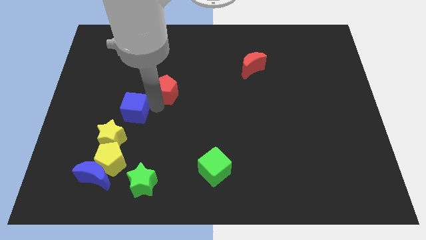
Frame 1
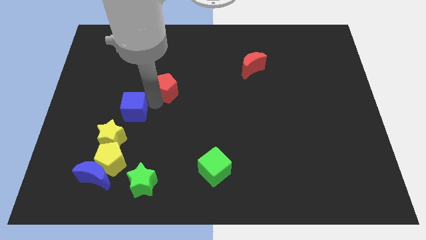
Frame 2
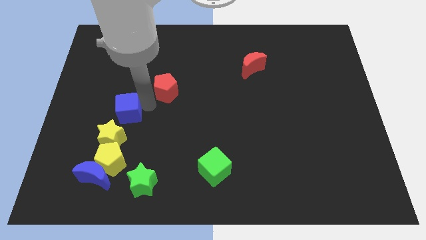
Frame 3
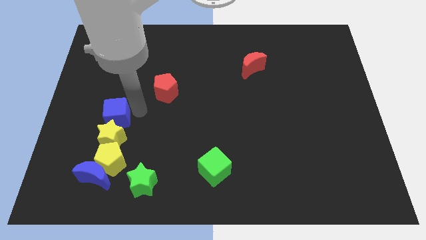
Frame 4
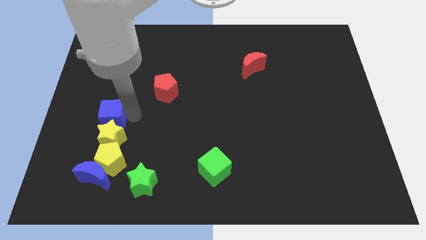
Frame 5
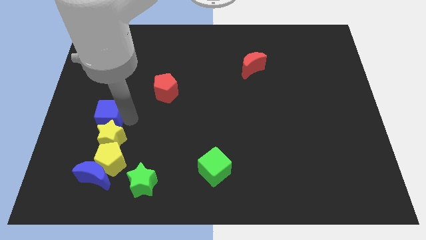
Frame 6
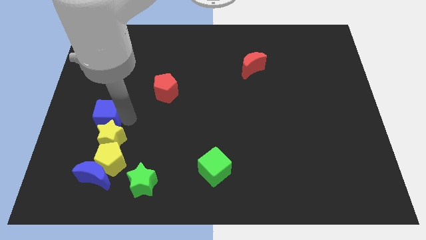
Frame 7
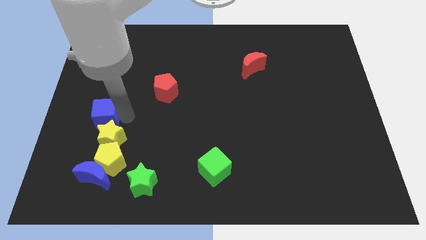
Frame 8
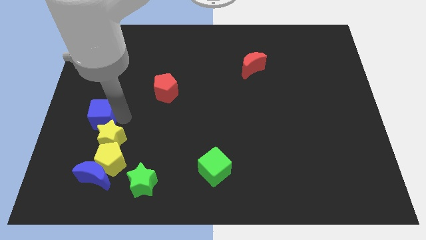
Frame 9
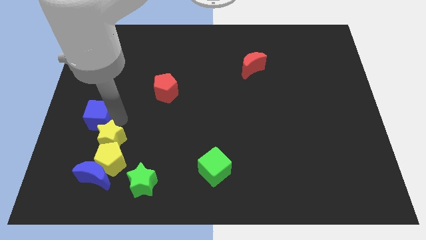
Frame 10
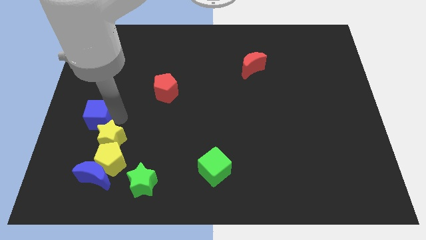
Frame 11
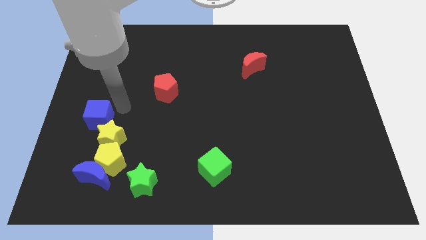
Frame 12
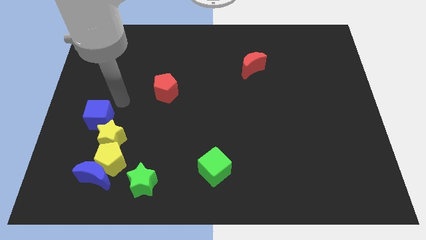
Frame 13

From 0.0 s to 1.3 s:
move the blue cube to the top left of the yellow star

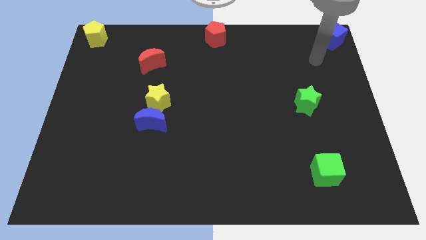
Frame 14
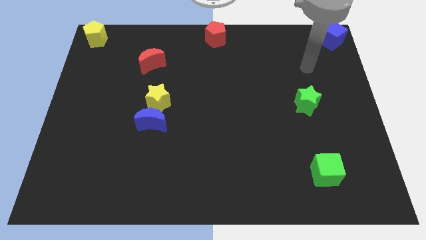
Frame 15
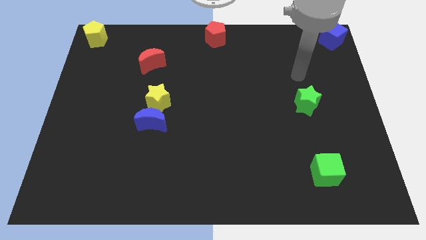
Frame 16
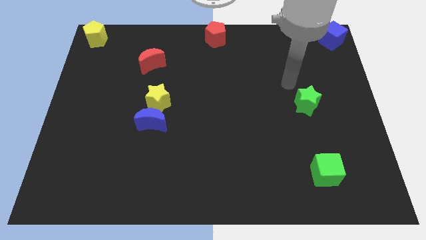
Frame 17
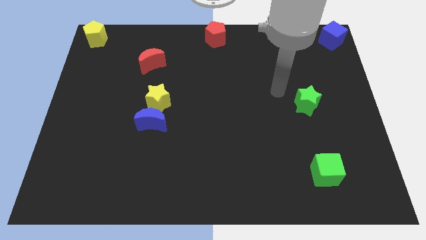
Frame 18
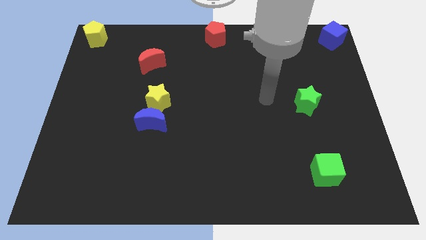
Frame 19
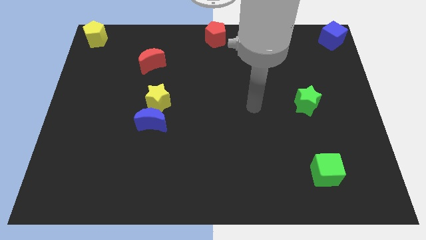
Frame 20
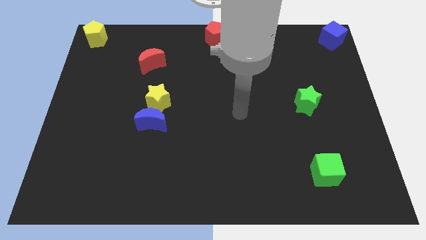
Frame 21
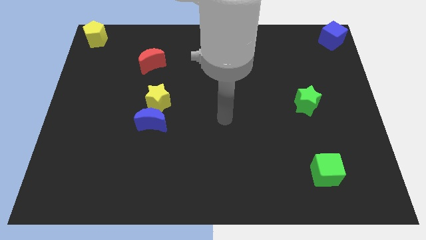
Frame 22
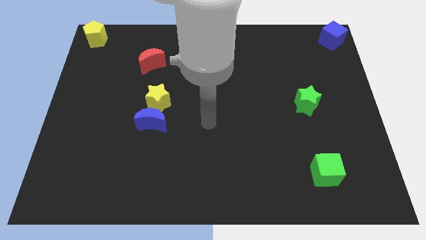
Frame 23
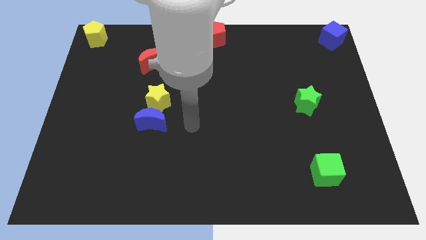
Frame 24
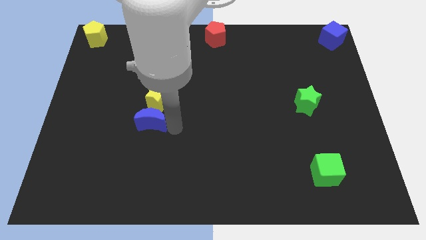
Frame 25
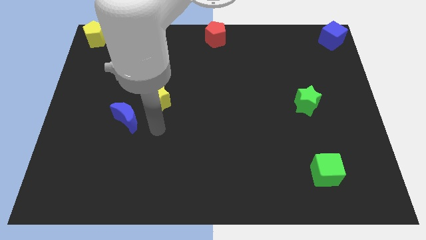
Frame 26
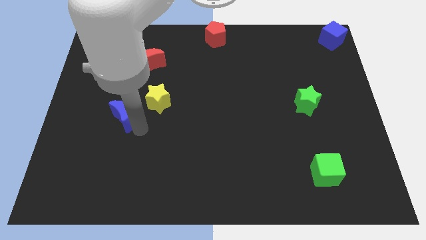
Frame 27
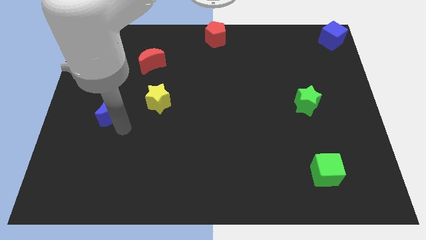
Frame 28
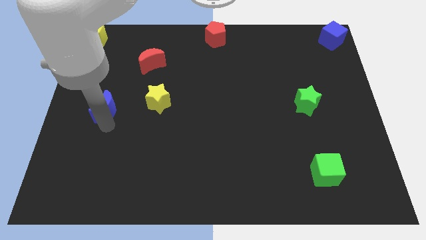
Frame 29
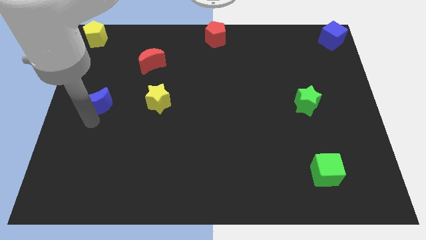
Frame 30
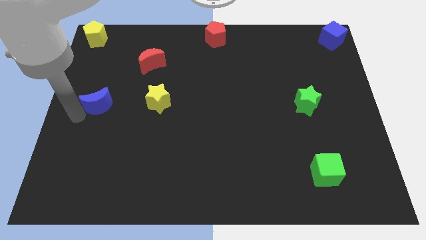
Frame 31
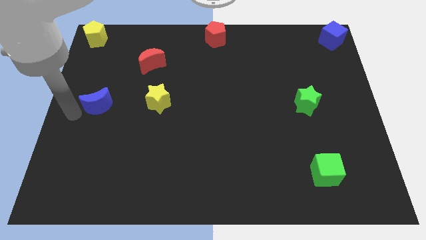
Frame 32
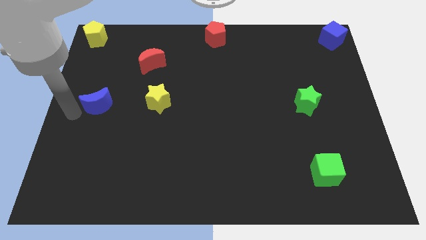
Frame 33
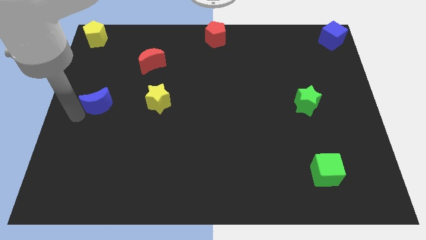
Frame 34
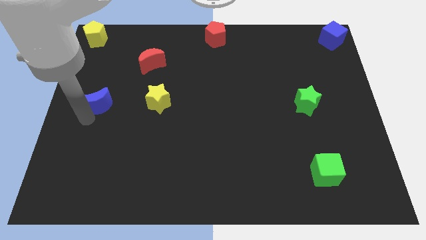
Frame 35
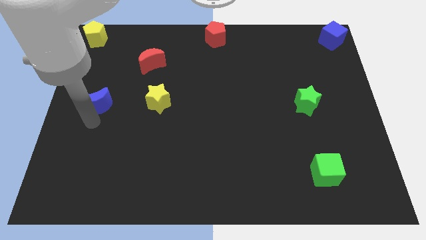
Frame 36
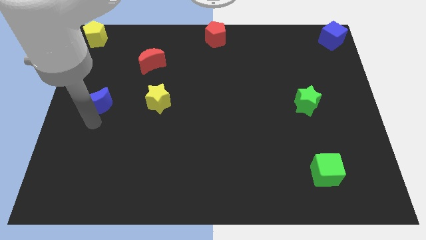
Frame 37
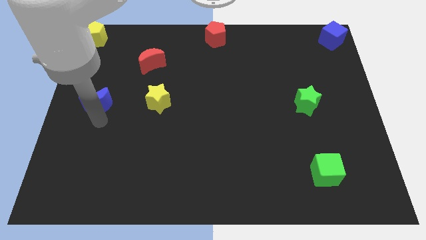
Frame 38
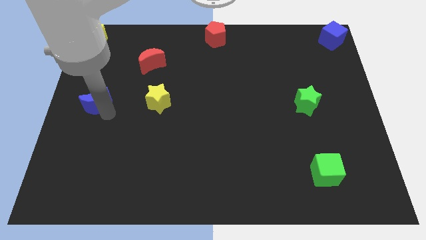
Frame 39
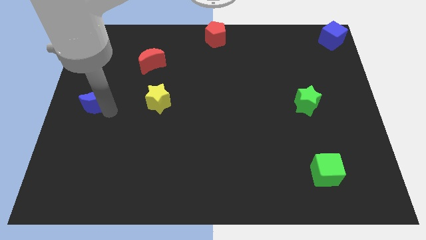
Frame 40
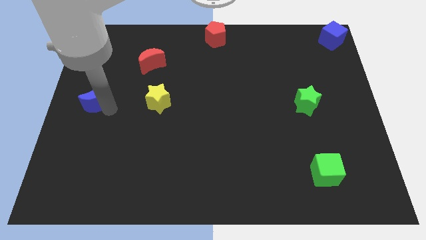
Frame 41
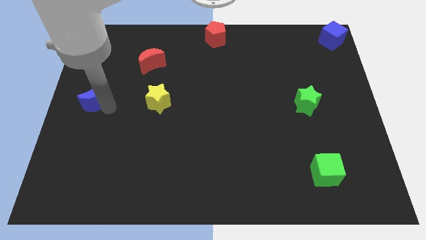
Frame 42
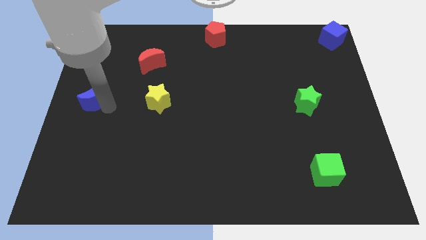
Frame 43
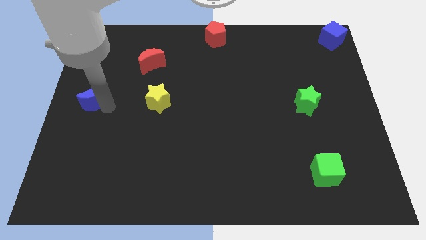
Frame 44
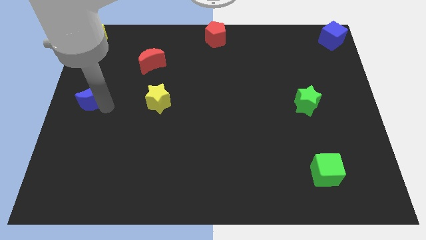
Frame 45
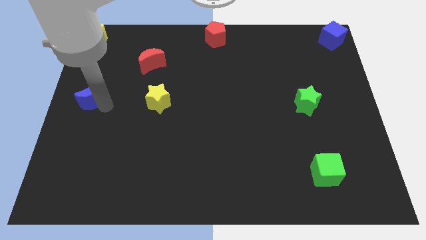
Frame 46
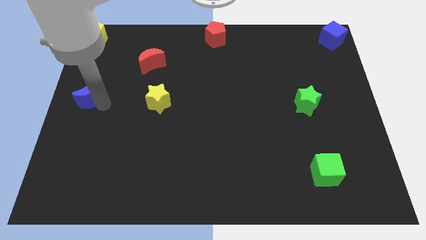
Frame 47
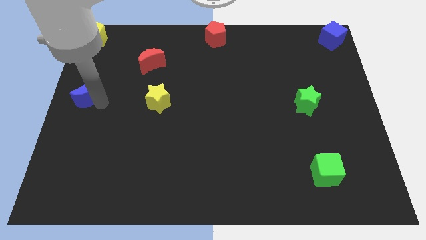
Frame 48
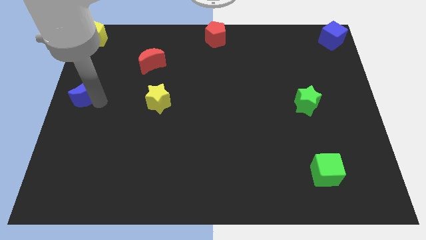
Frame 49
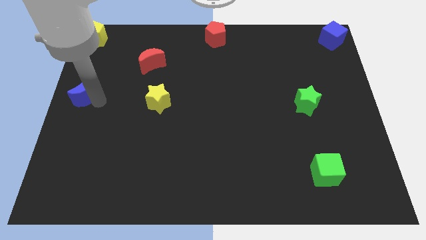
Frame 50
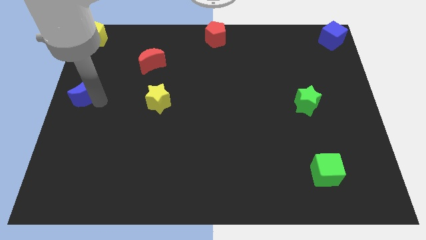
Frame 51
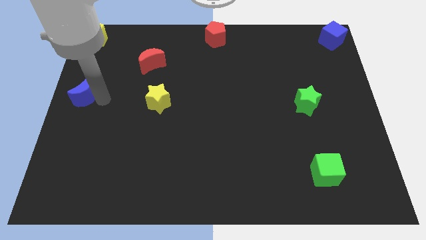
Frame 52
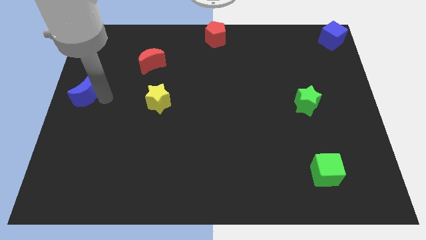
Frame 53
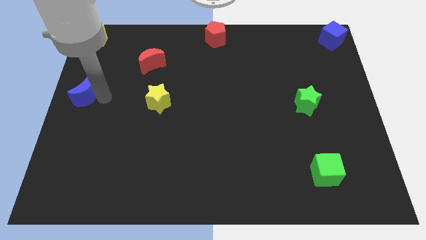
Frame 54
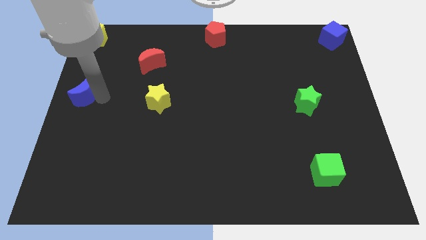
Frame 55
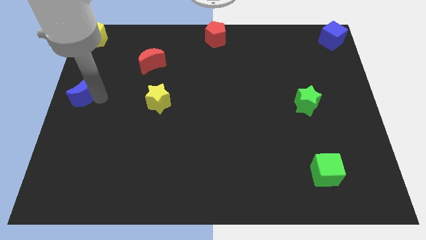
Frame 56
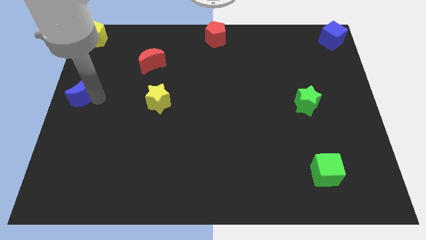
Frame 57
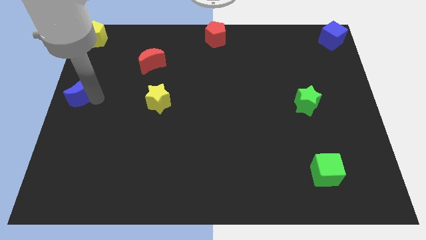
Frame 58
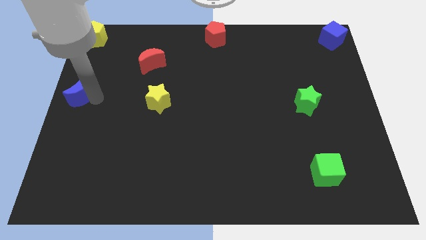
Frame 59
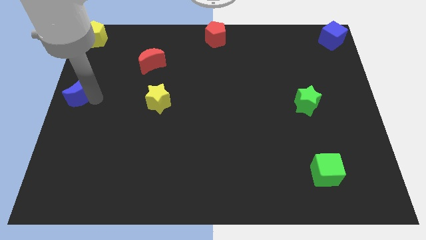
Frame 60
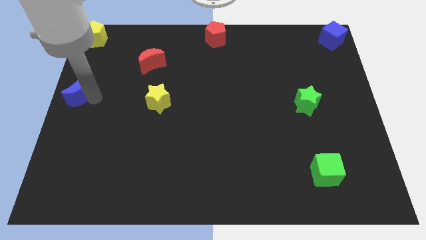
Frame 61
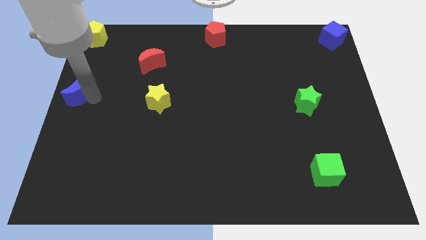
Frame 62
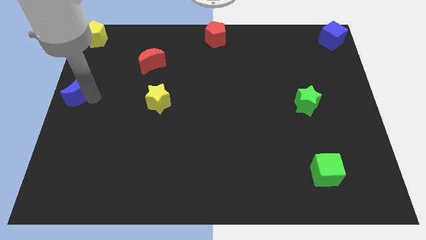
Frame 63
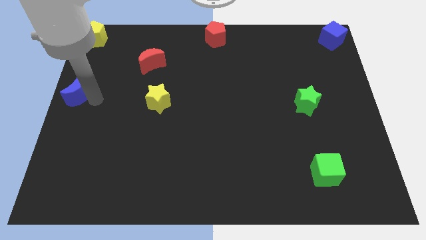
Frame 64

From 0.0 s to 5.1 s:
push the blue moon to the left side center

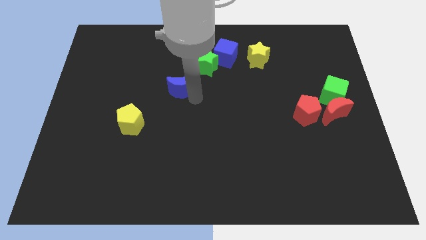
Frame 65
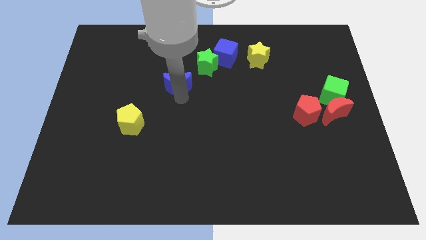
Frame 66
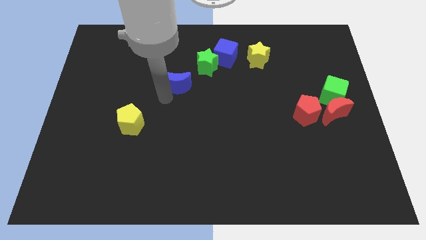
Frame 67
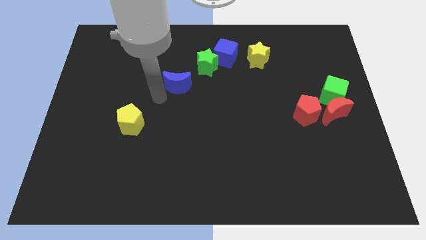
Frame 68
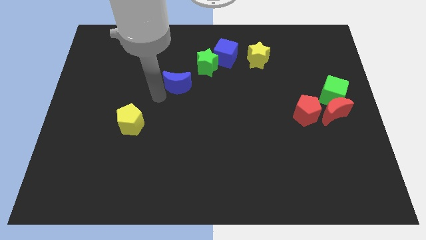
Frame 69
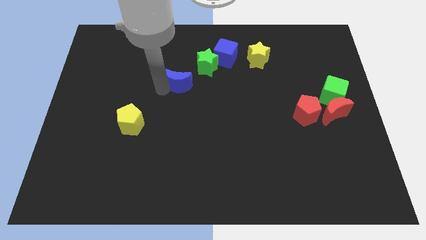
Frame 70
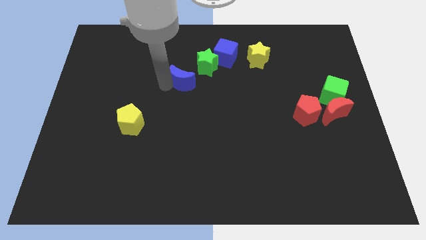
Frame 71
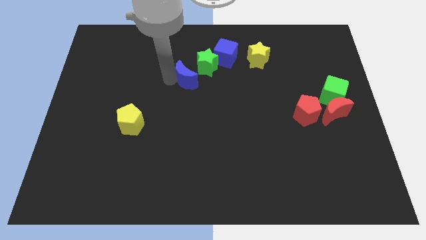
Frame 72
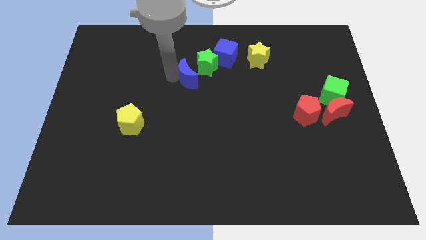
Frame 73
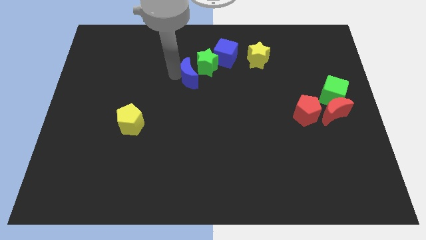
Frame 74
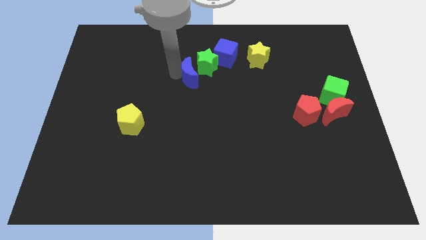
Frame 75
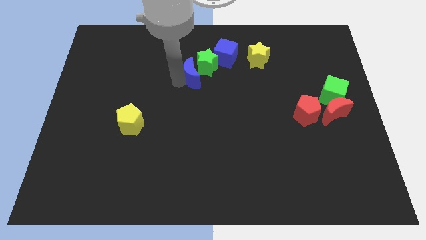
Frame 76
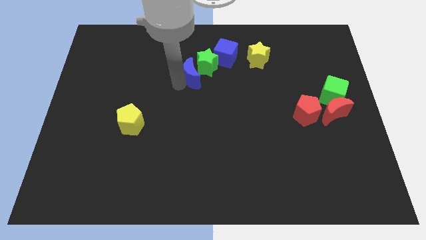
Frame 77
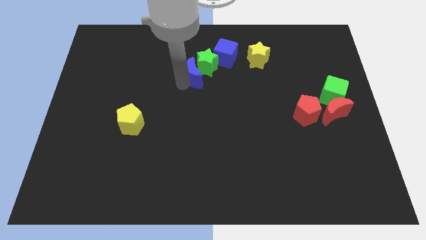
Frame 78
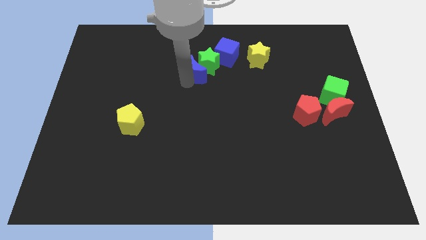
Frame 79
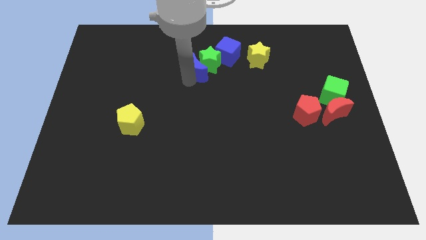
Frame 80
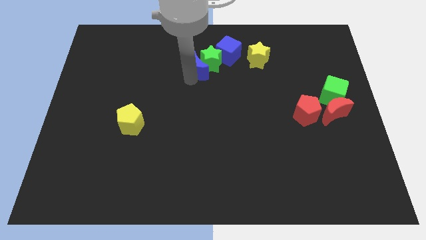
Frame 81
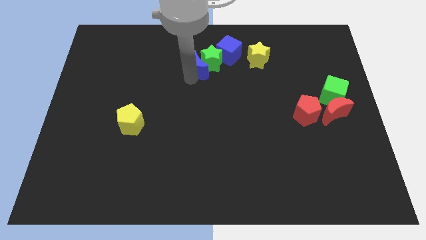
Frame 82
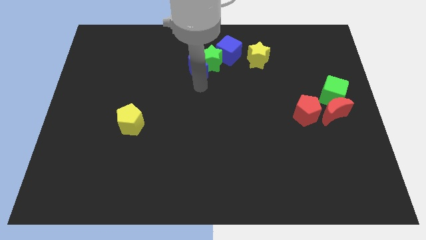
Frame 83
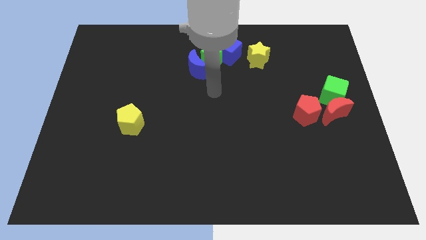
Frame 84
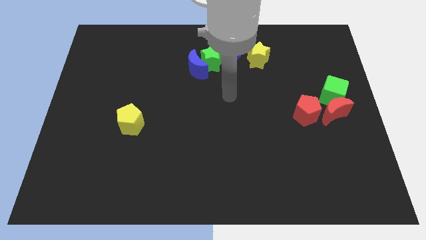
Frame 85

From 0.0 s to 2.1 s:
slide blue moon close to green star

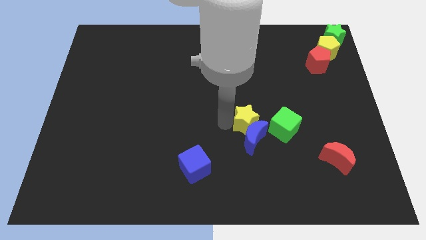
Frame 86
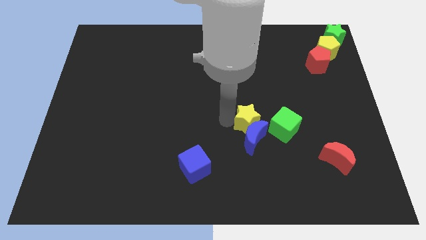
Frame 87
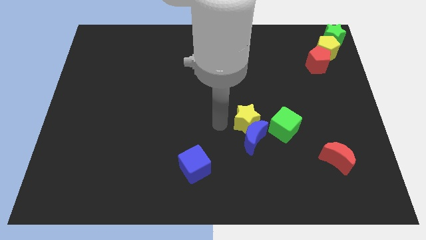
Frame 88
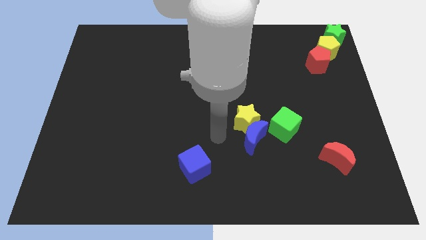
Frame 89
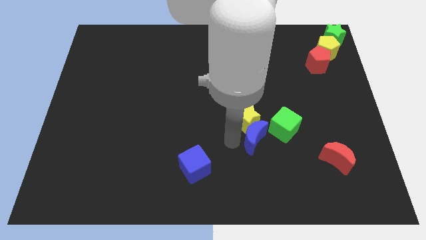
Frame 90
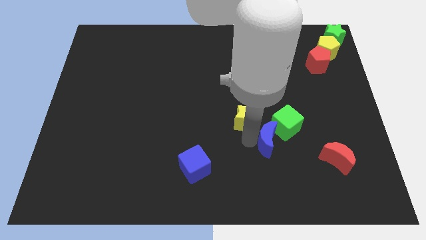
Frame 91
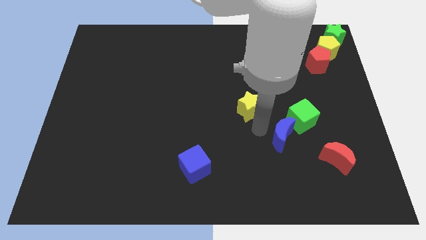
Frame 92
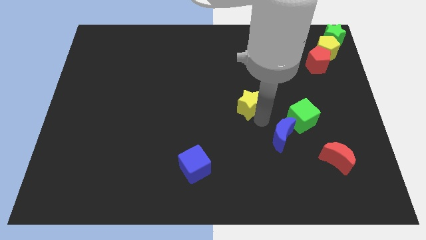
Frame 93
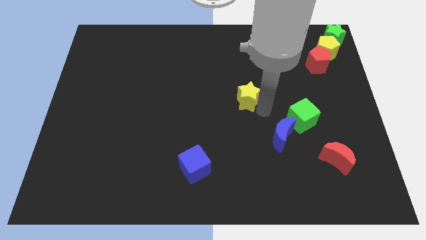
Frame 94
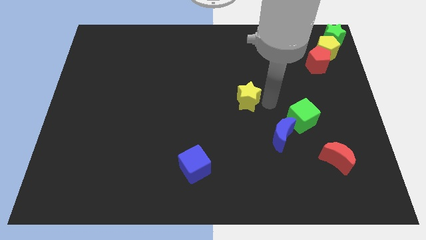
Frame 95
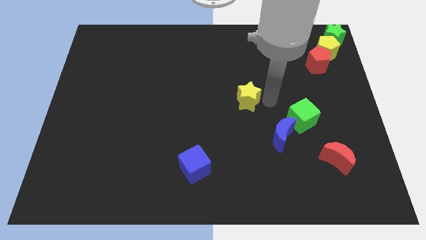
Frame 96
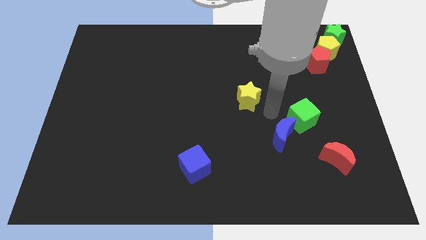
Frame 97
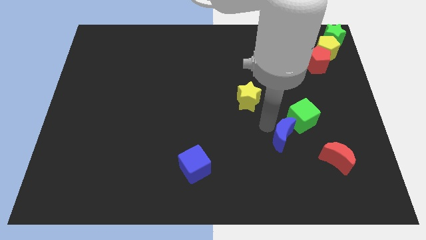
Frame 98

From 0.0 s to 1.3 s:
separate the yellow star from the blue crescent
